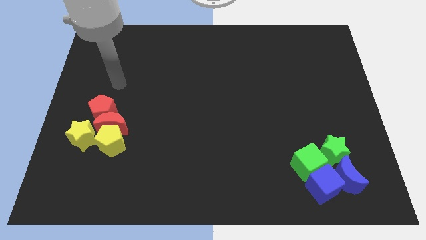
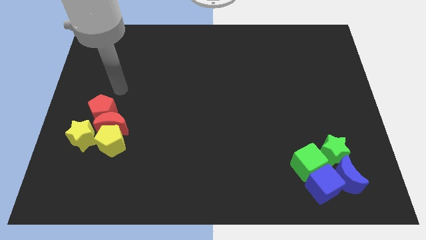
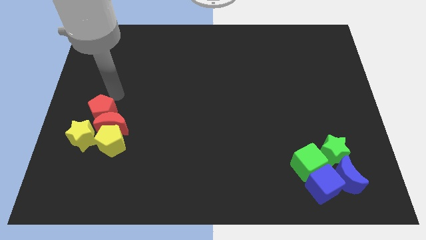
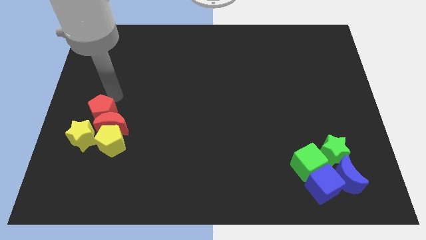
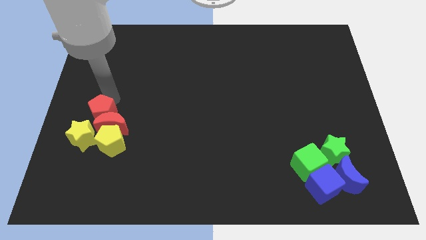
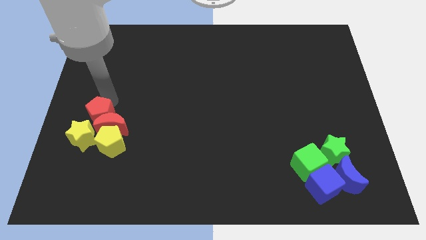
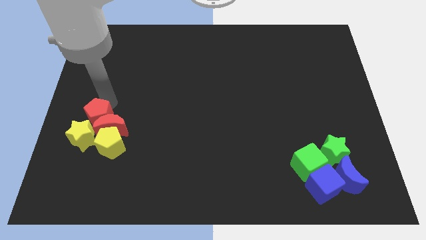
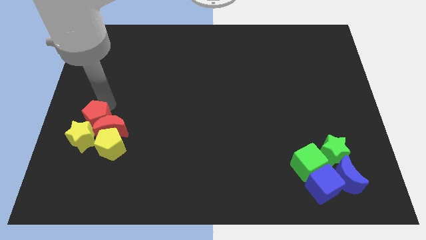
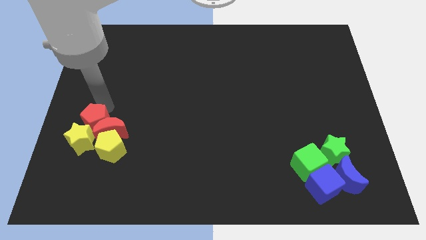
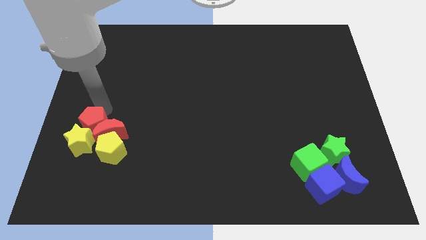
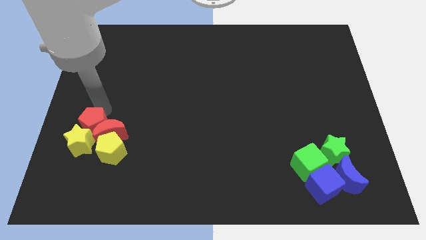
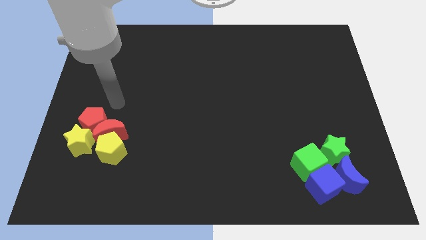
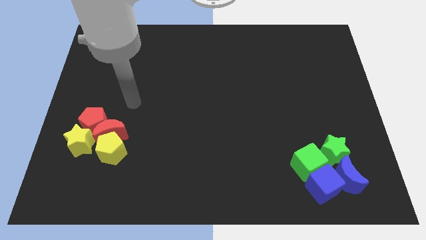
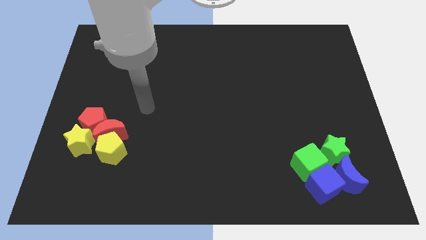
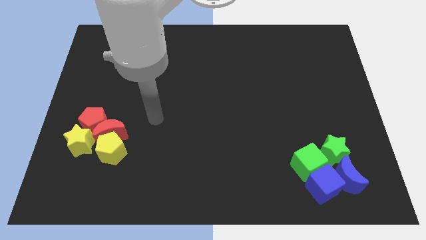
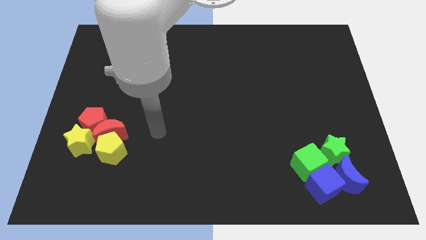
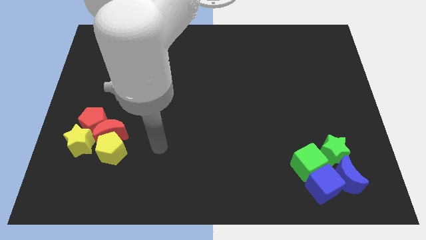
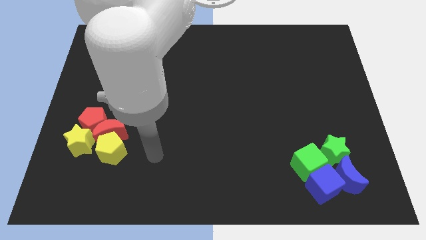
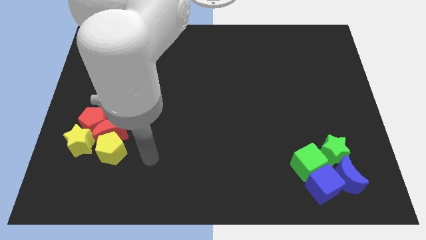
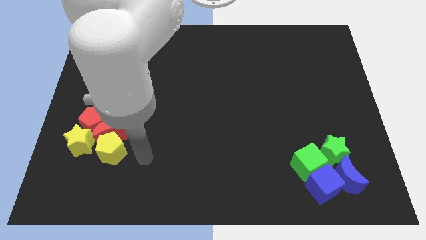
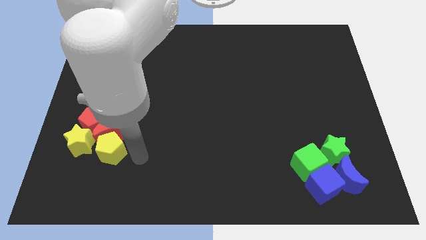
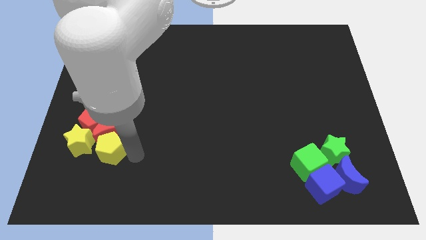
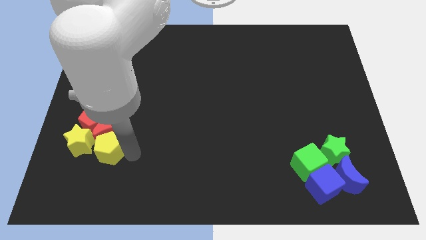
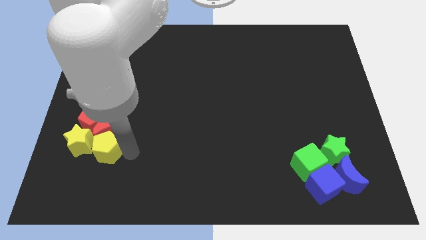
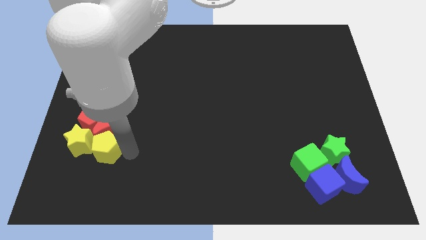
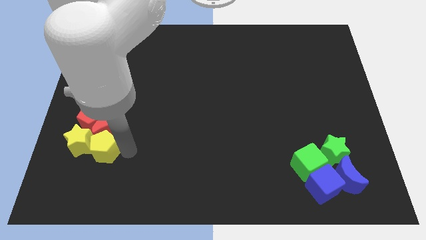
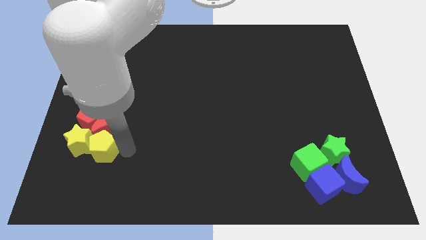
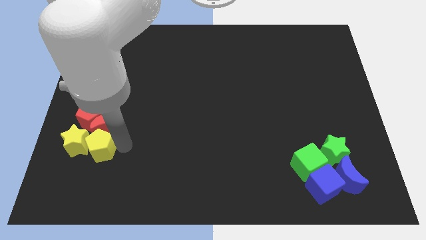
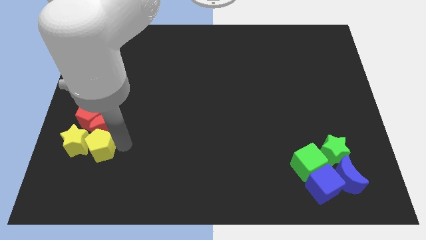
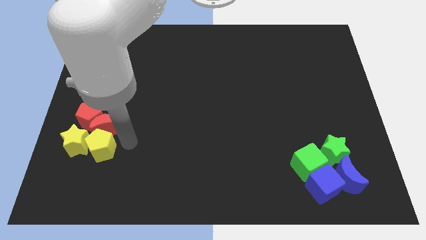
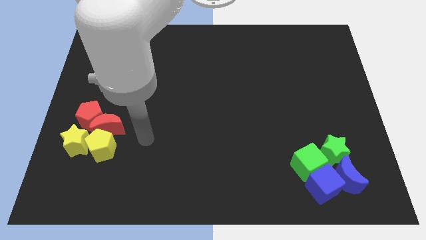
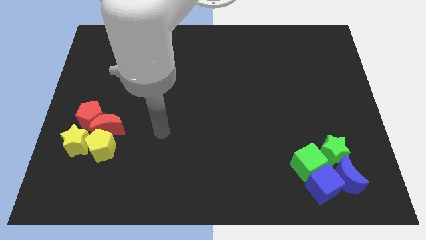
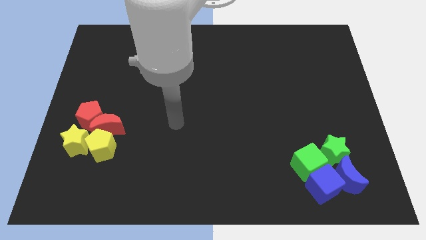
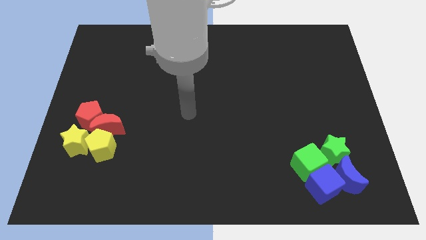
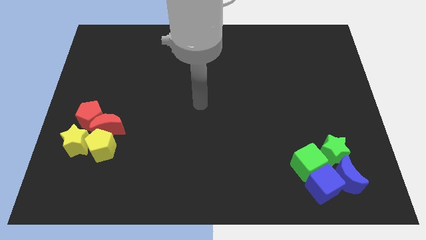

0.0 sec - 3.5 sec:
adjust the group of blocks at the left side of the table

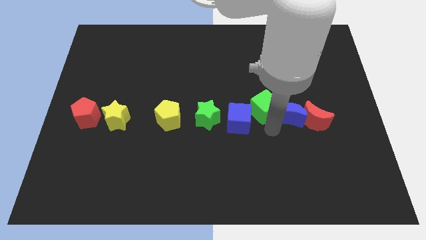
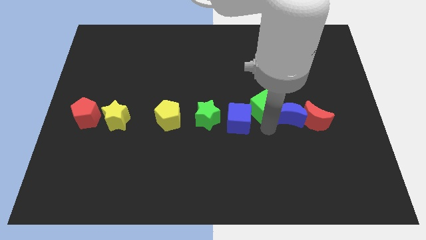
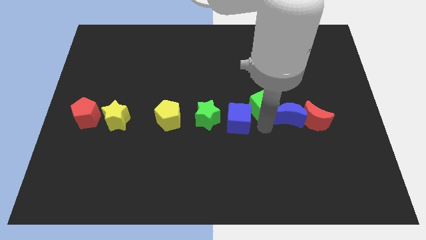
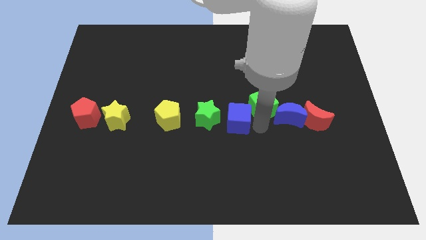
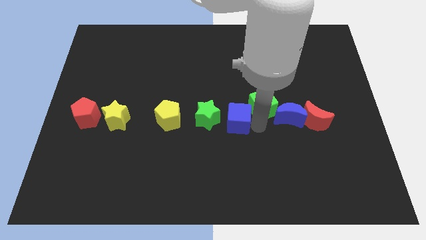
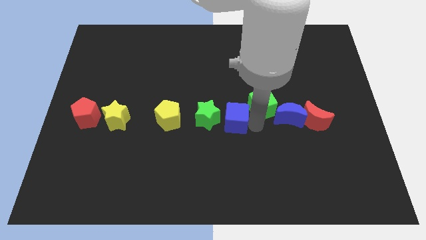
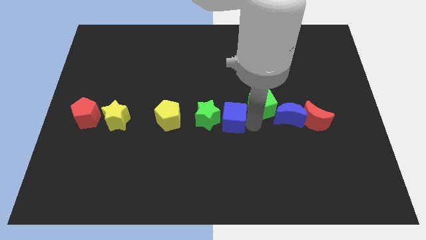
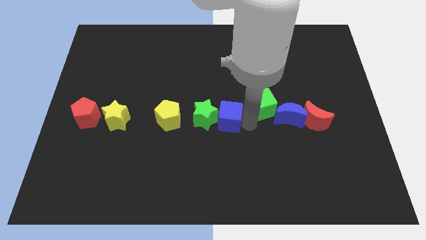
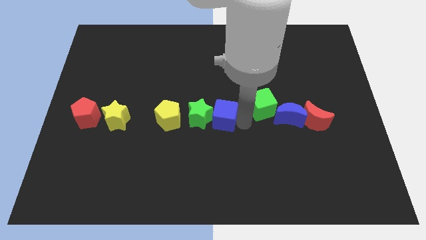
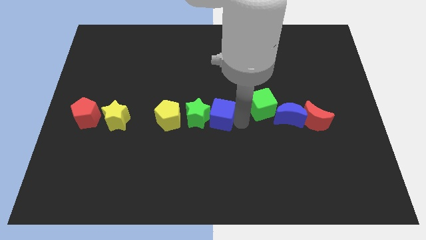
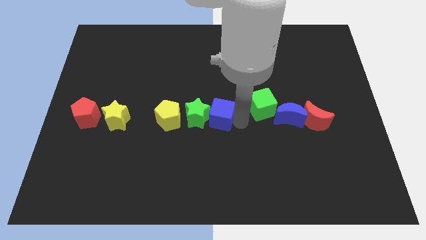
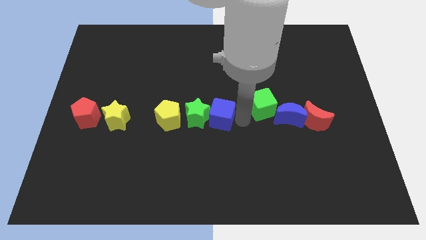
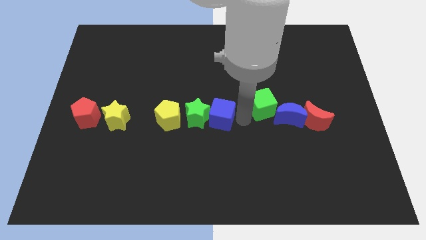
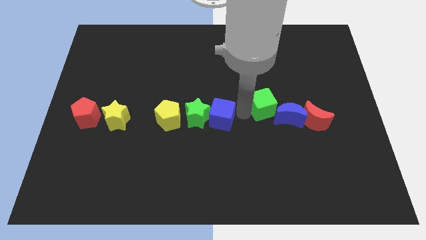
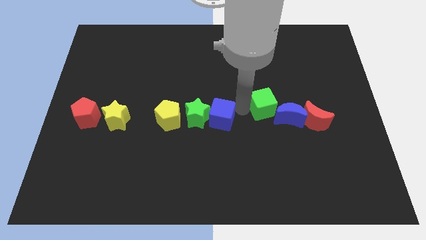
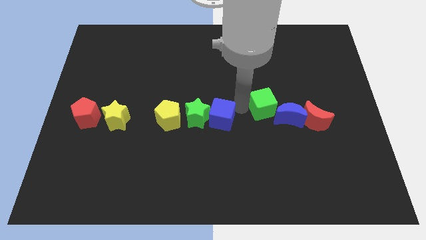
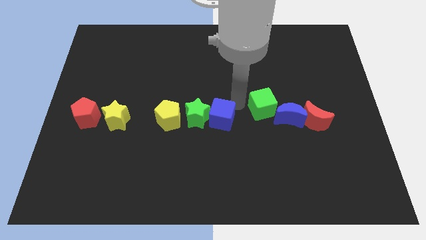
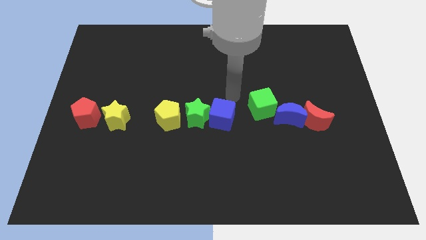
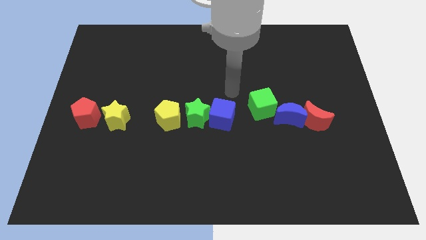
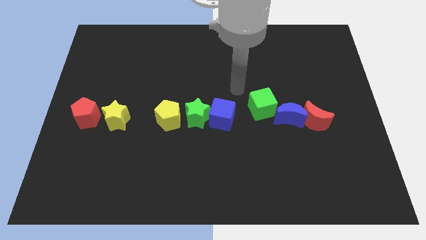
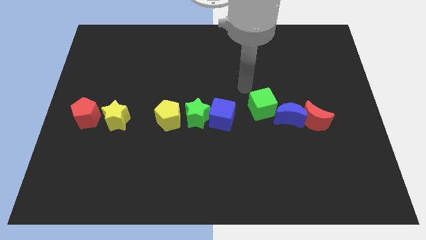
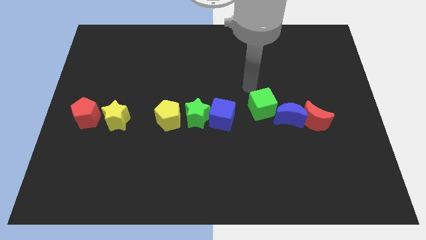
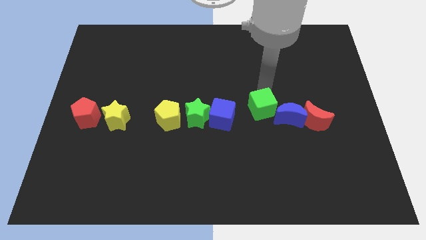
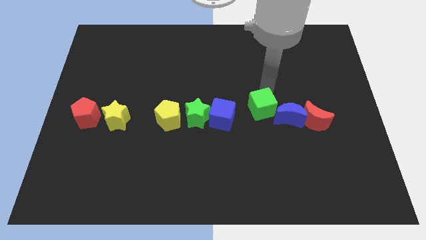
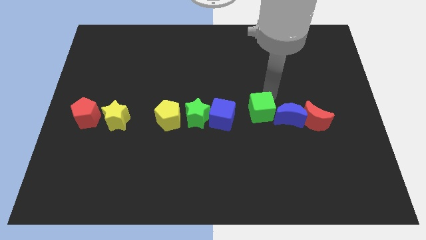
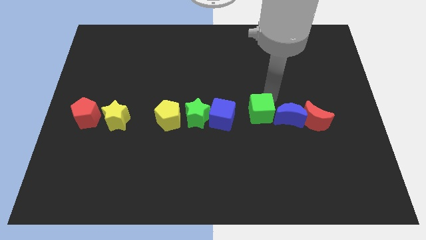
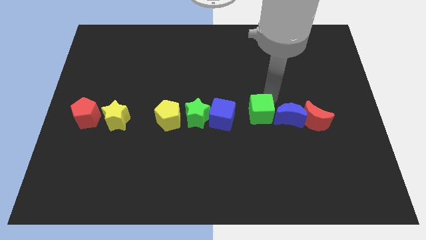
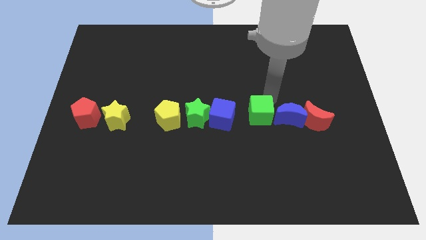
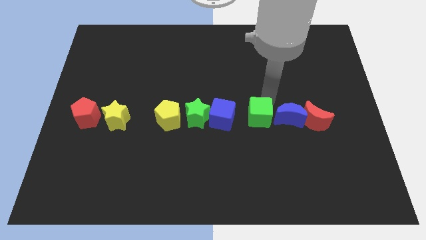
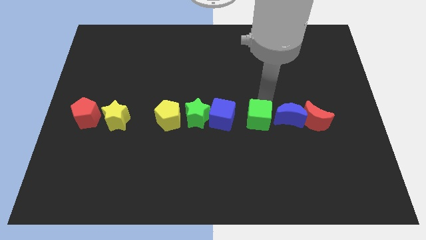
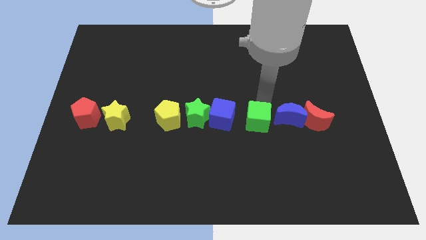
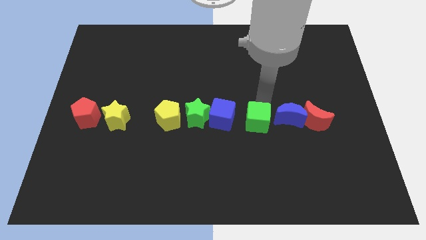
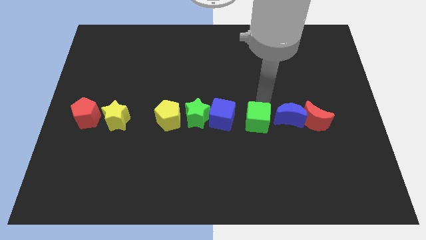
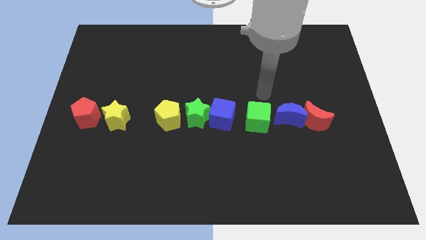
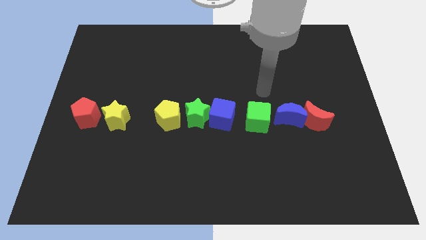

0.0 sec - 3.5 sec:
place green cube along with blue cube in a horizontal line

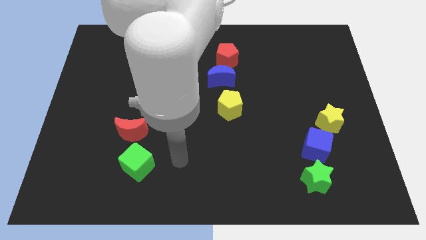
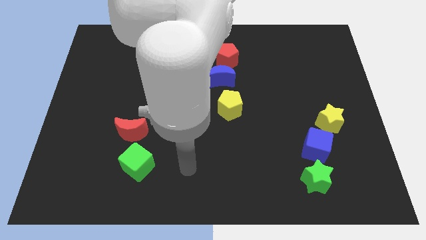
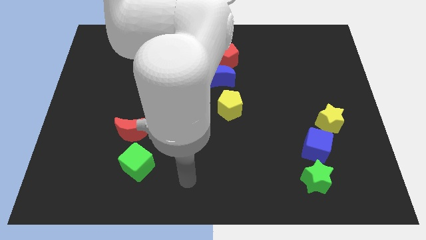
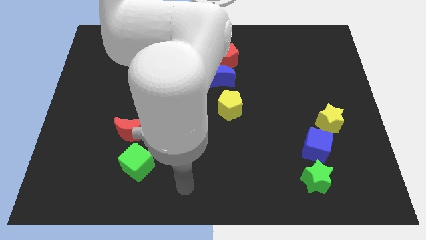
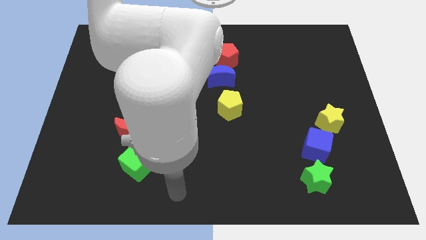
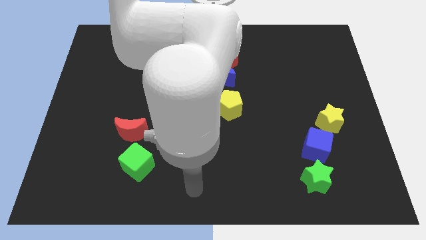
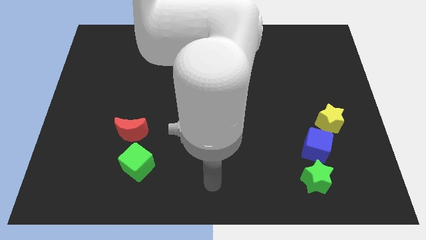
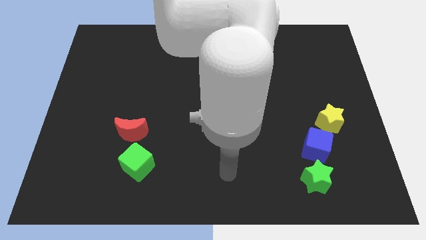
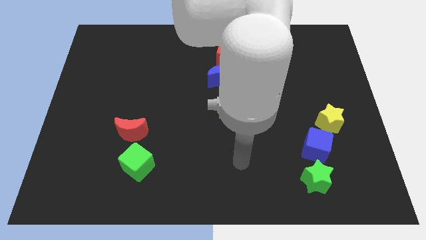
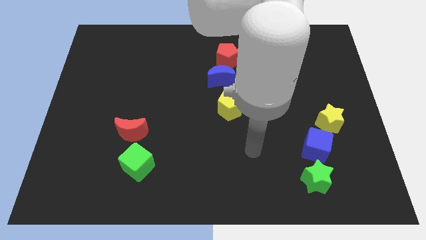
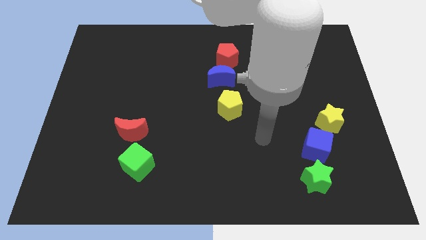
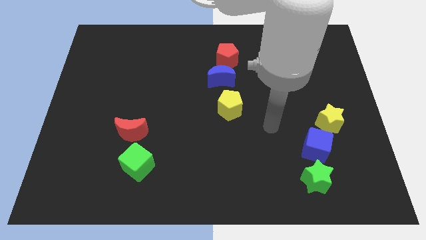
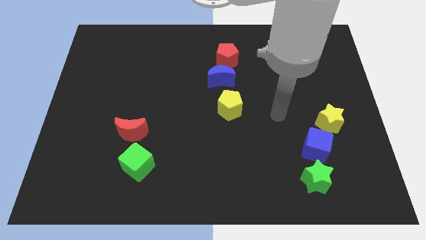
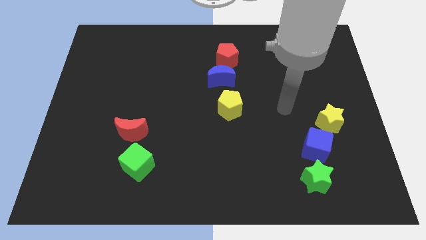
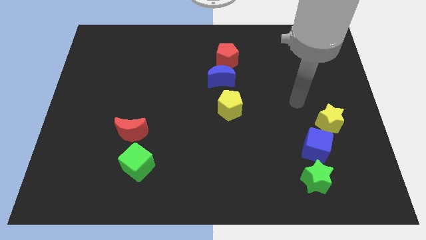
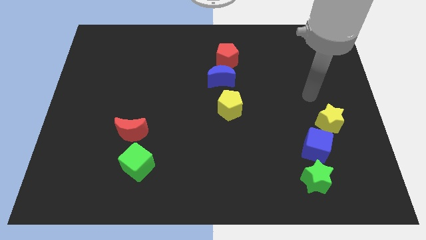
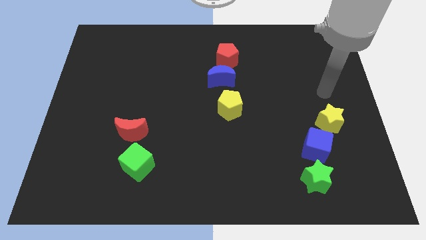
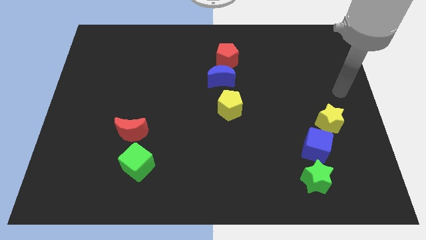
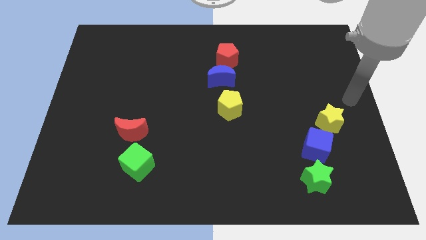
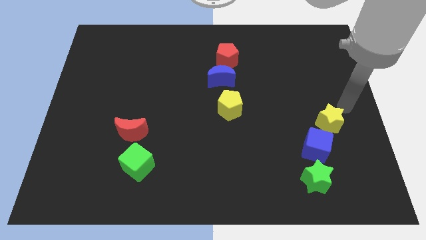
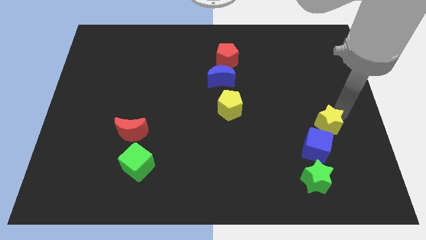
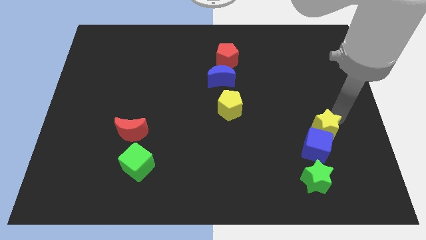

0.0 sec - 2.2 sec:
place your arm above the yellow star
